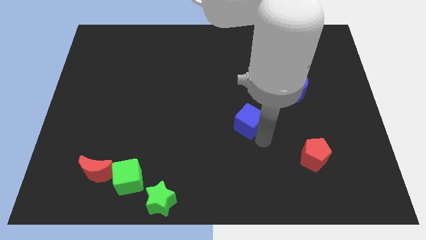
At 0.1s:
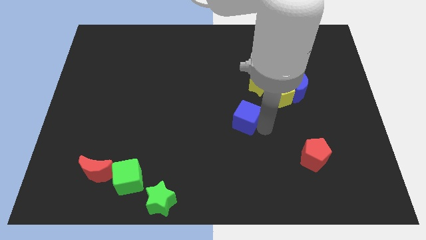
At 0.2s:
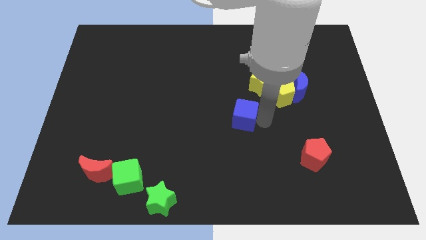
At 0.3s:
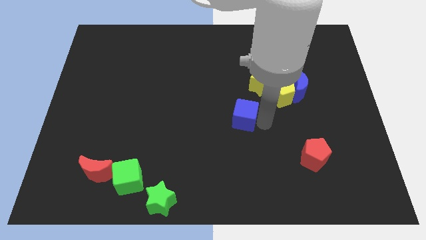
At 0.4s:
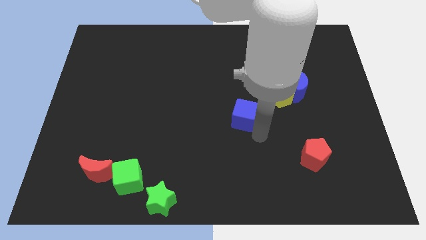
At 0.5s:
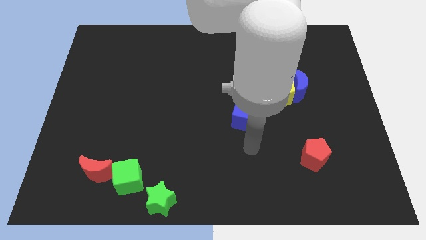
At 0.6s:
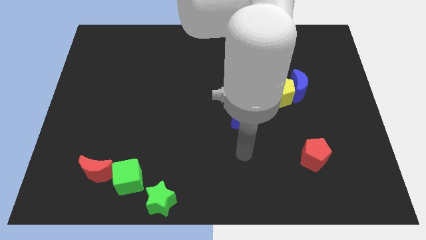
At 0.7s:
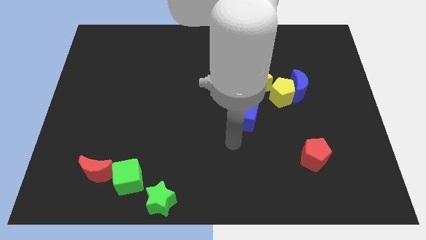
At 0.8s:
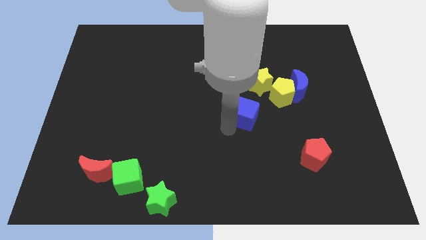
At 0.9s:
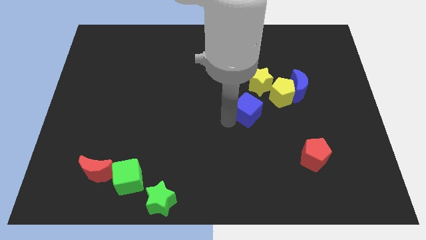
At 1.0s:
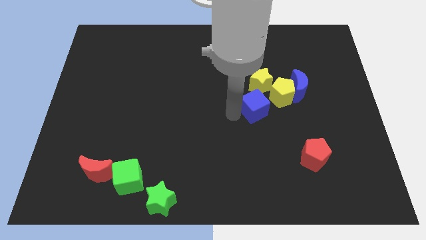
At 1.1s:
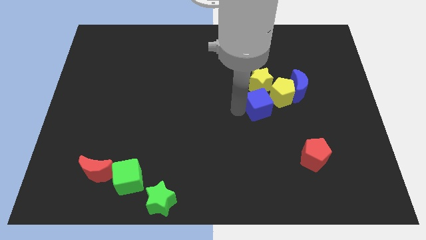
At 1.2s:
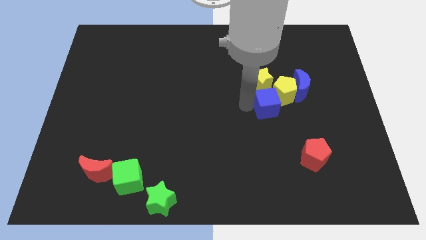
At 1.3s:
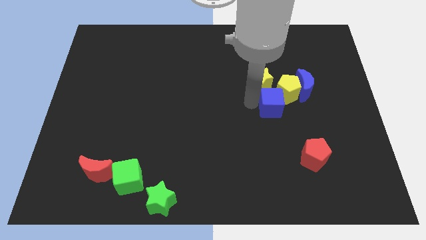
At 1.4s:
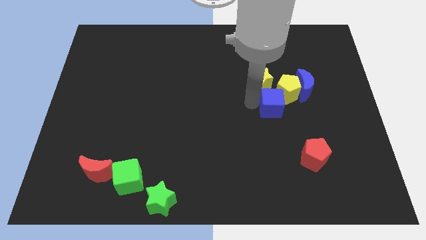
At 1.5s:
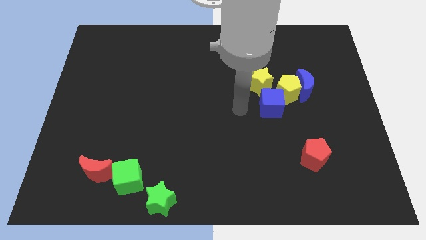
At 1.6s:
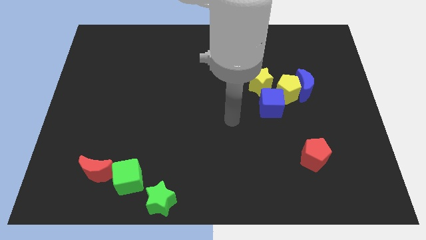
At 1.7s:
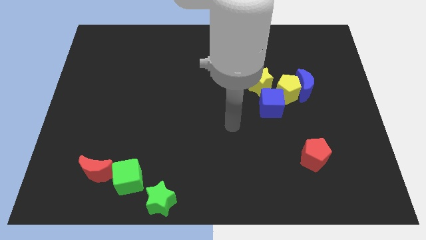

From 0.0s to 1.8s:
push the blue cube into group of blocks

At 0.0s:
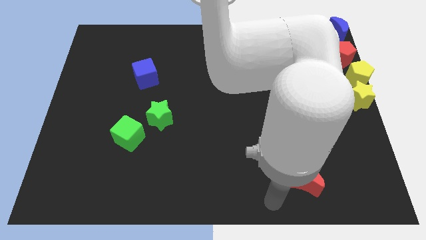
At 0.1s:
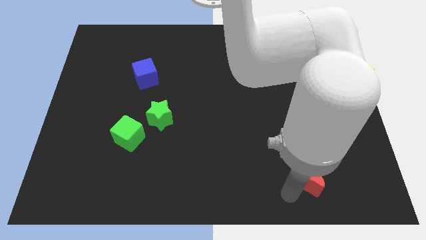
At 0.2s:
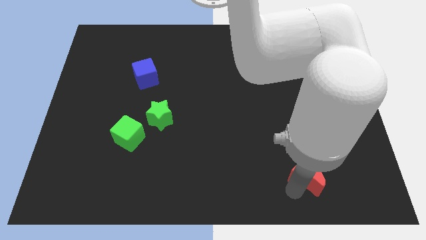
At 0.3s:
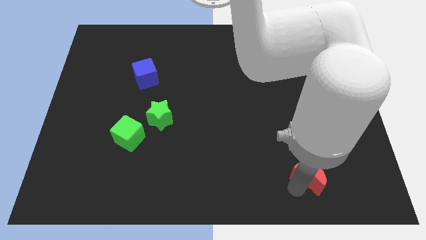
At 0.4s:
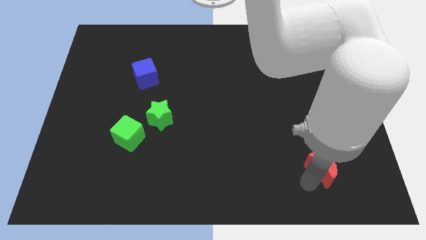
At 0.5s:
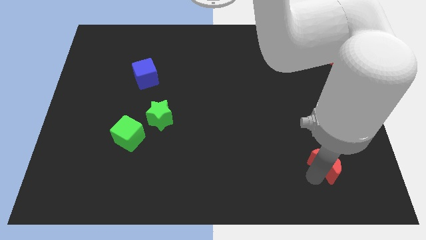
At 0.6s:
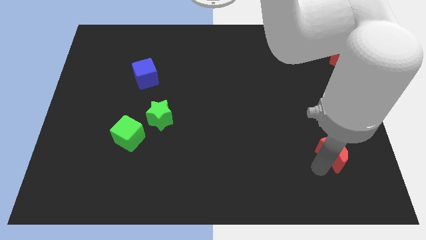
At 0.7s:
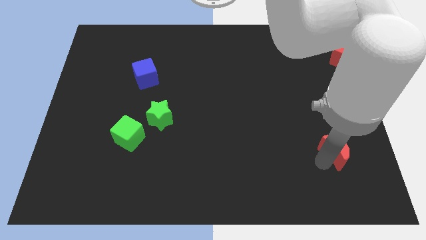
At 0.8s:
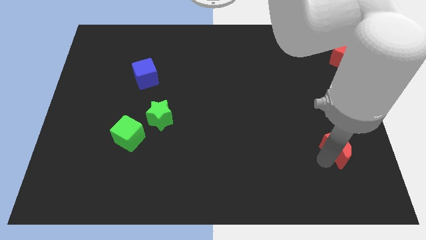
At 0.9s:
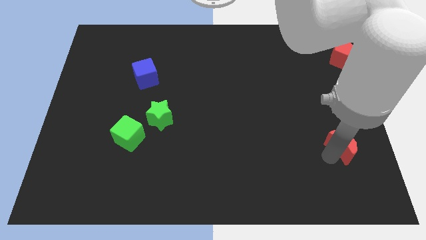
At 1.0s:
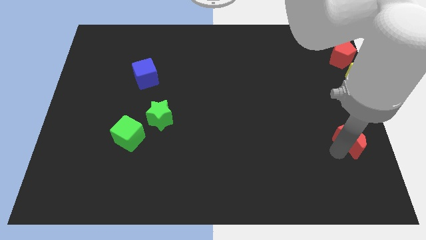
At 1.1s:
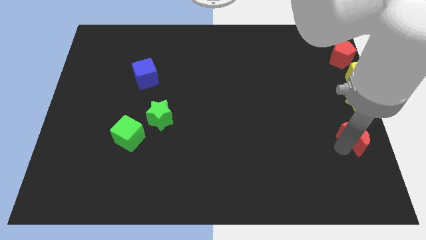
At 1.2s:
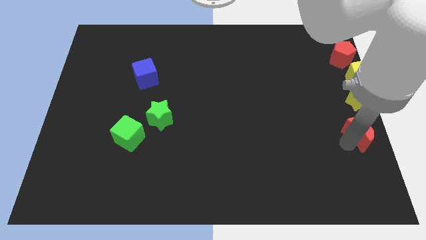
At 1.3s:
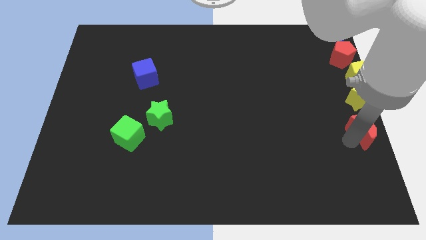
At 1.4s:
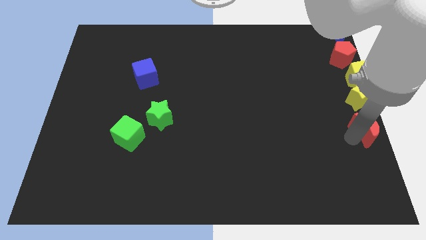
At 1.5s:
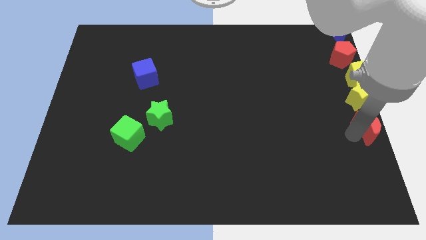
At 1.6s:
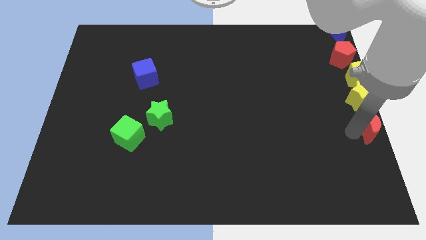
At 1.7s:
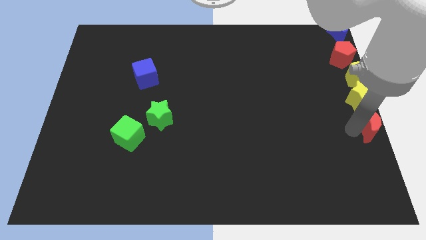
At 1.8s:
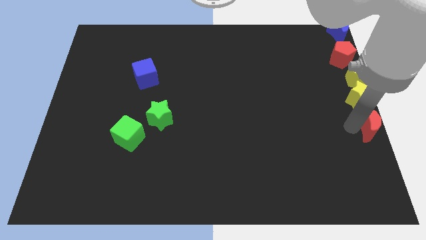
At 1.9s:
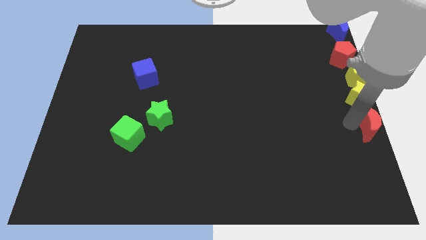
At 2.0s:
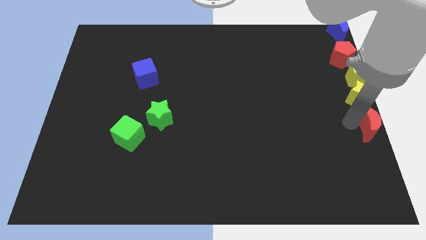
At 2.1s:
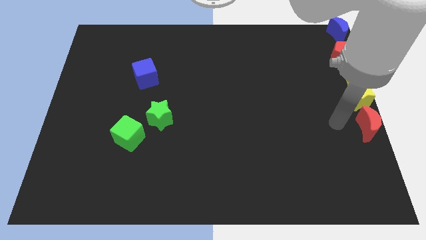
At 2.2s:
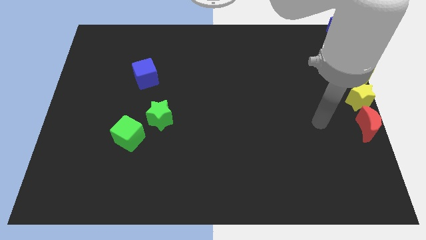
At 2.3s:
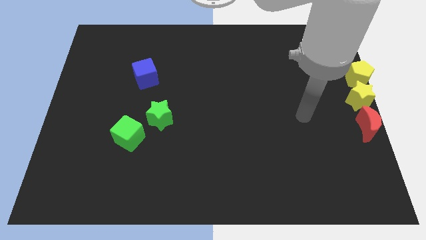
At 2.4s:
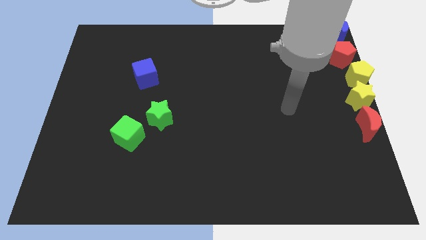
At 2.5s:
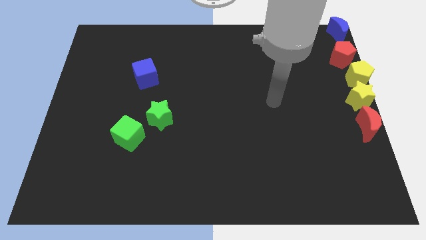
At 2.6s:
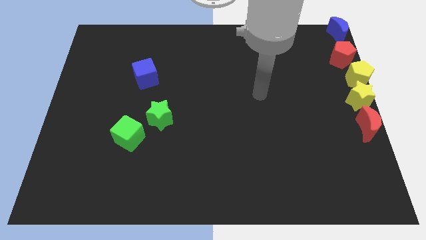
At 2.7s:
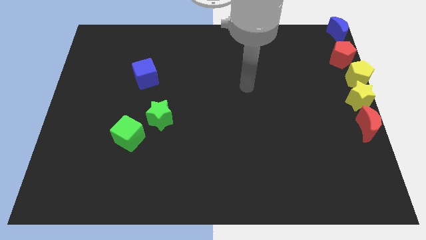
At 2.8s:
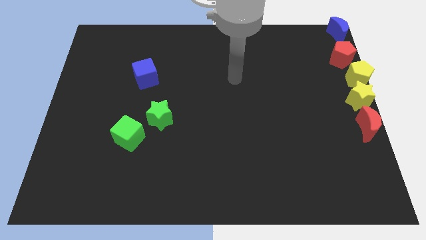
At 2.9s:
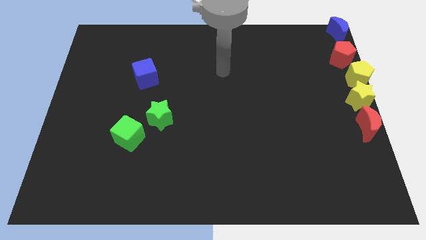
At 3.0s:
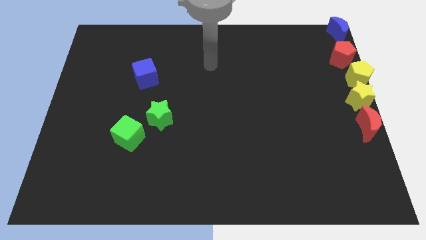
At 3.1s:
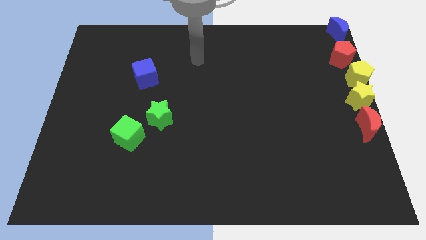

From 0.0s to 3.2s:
move the red pentagon vertically below the yellow star

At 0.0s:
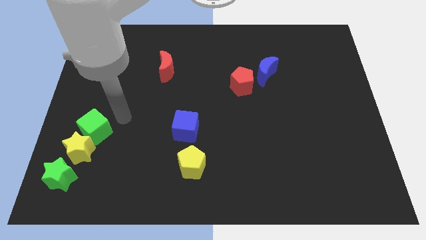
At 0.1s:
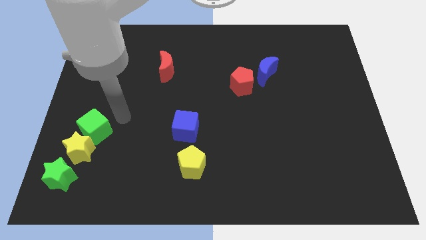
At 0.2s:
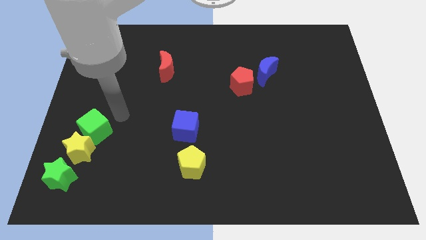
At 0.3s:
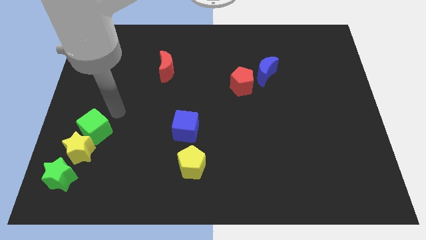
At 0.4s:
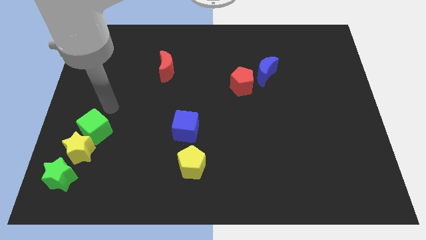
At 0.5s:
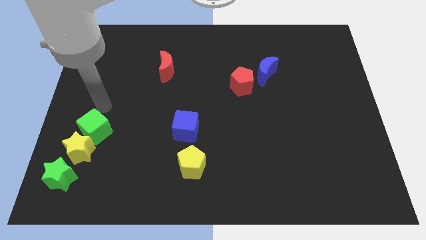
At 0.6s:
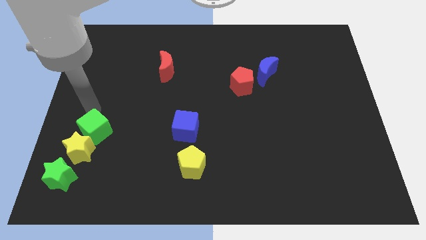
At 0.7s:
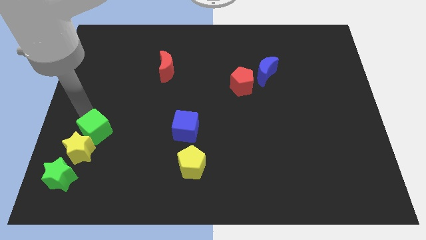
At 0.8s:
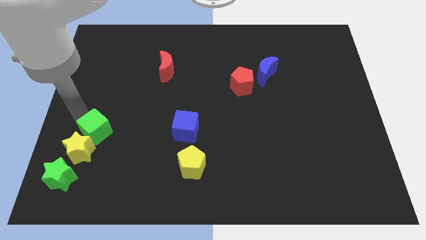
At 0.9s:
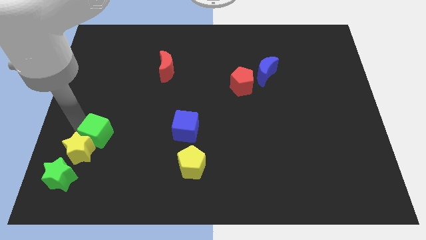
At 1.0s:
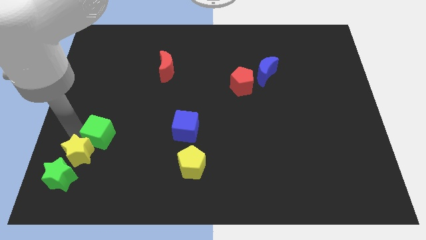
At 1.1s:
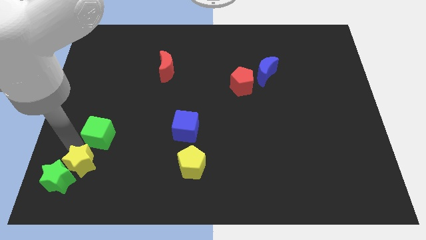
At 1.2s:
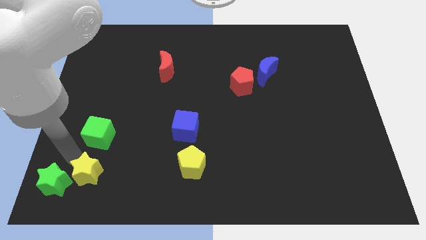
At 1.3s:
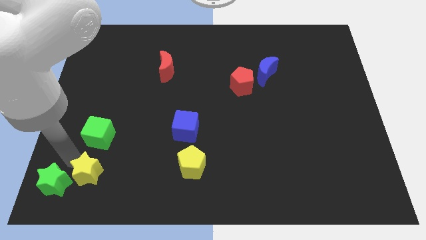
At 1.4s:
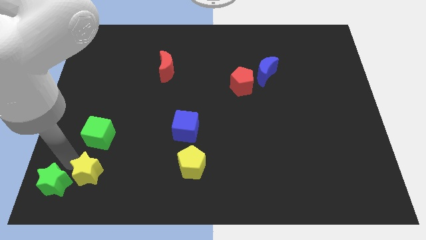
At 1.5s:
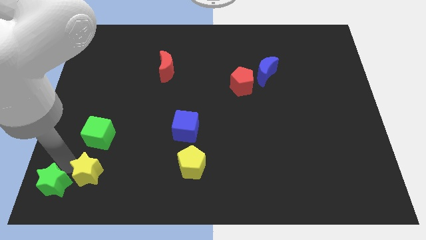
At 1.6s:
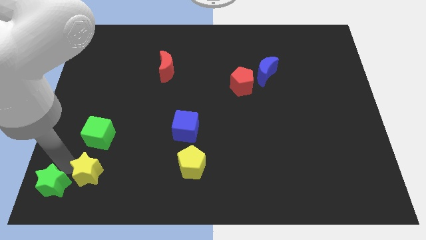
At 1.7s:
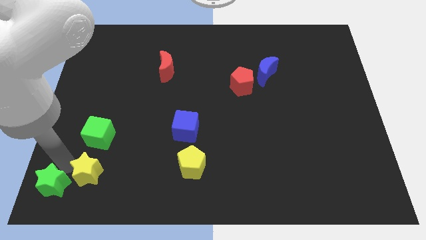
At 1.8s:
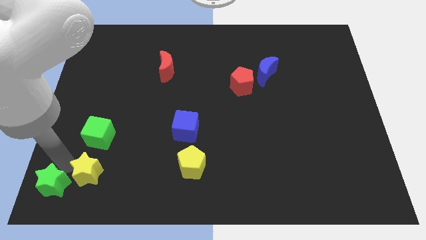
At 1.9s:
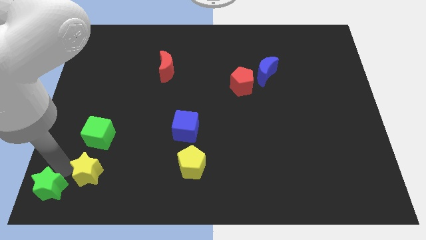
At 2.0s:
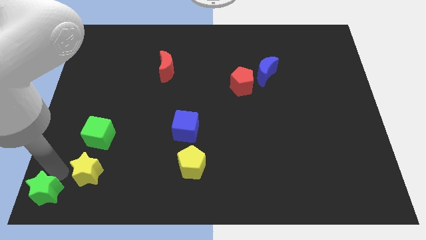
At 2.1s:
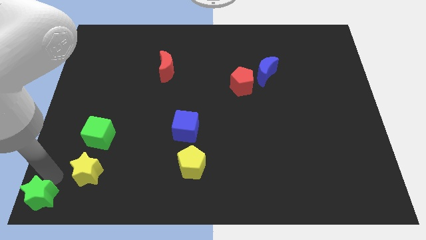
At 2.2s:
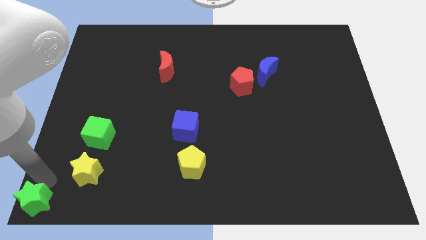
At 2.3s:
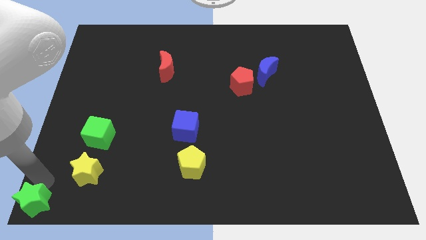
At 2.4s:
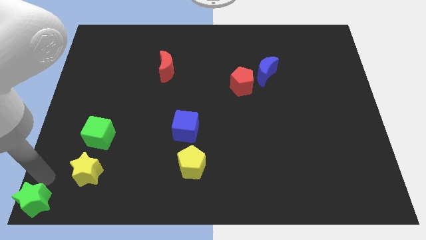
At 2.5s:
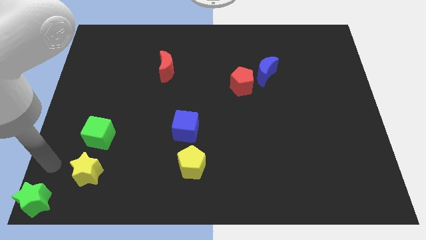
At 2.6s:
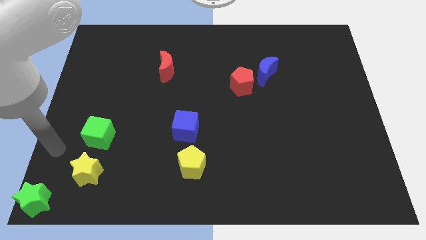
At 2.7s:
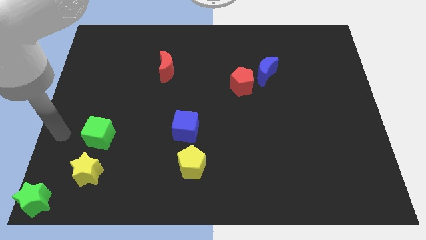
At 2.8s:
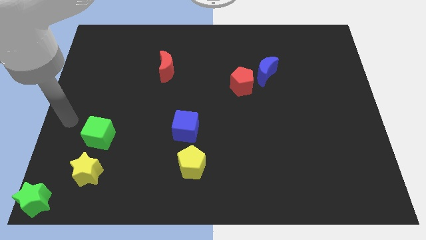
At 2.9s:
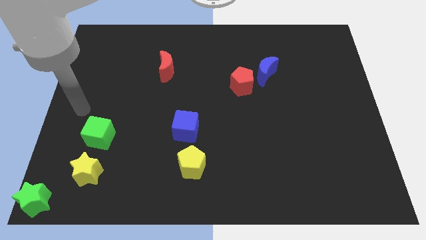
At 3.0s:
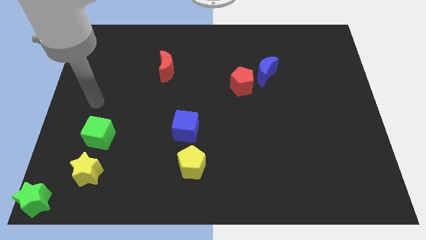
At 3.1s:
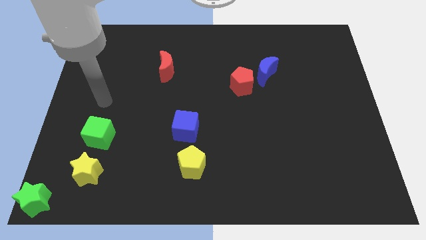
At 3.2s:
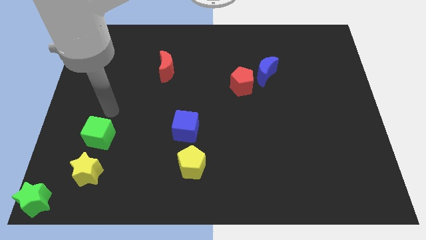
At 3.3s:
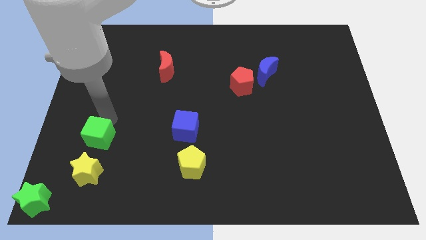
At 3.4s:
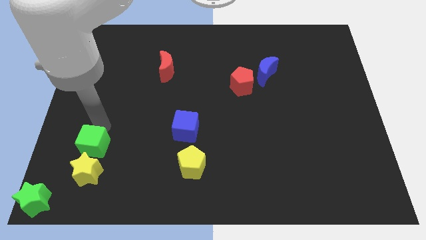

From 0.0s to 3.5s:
move the green star to the bottom left corner of the board

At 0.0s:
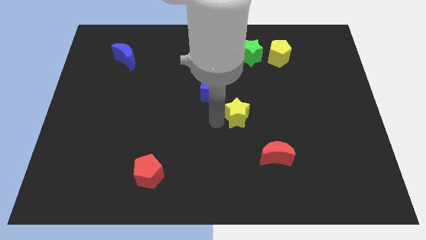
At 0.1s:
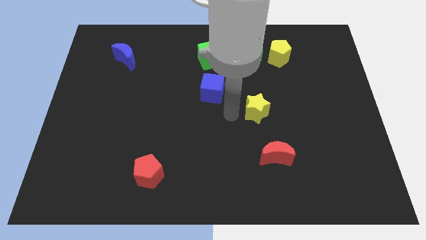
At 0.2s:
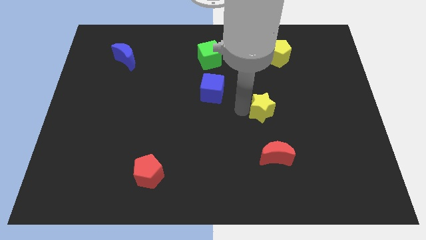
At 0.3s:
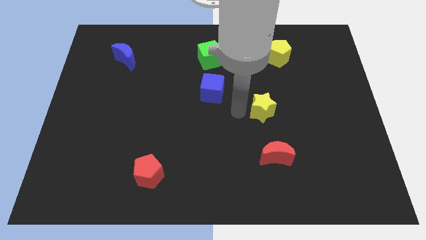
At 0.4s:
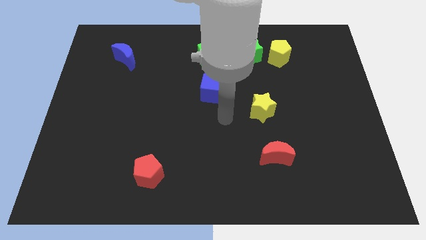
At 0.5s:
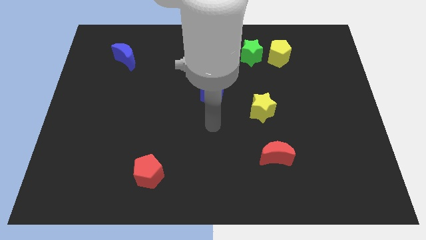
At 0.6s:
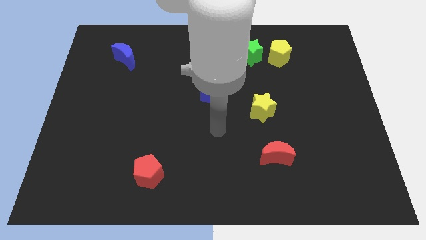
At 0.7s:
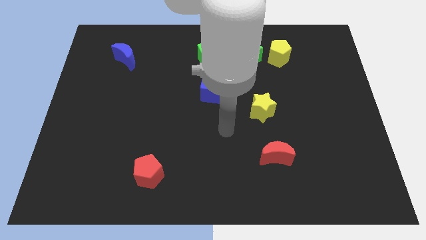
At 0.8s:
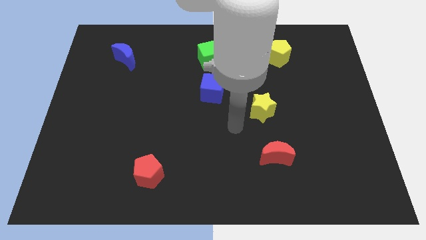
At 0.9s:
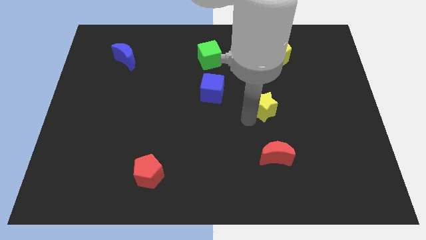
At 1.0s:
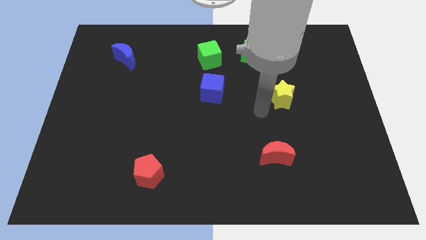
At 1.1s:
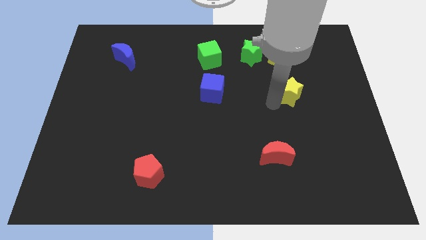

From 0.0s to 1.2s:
move yellow star vertical to yellow pentagon
